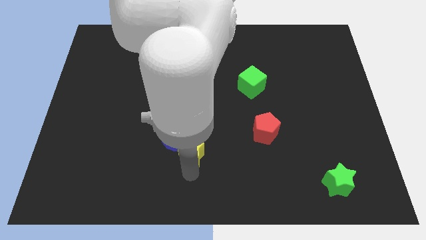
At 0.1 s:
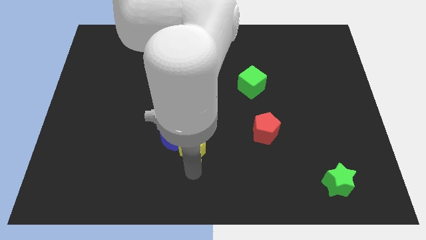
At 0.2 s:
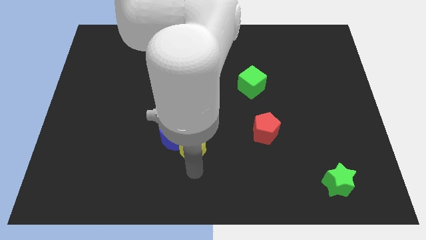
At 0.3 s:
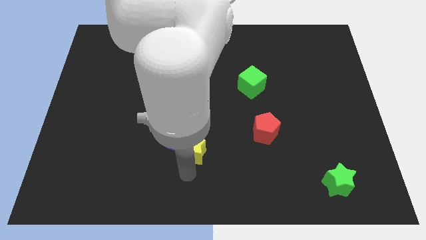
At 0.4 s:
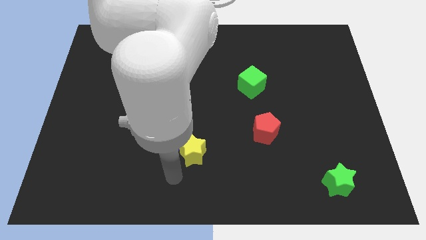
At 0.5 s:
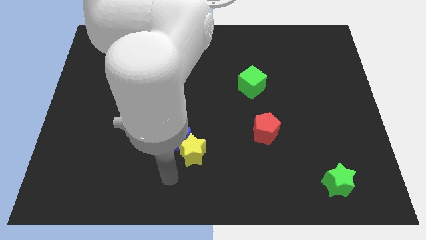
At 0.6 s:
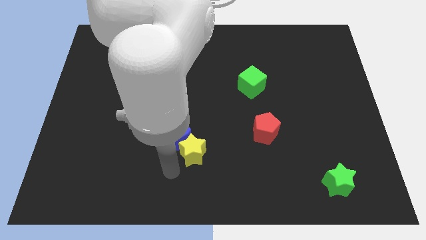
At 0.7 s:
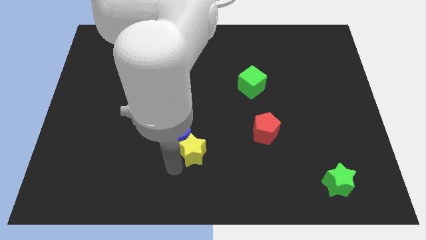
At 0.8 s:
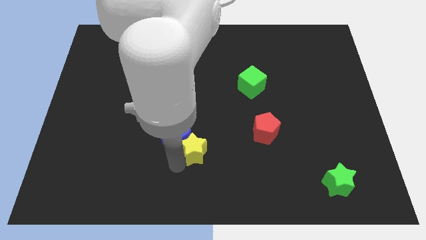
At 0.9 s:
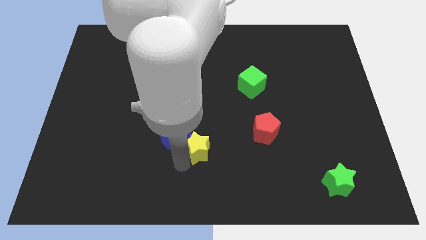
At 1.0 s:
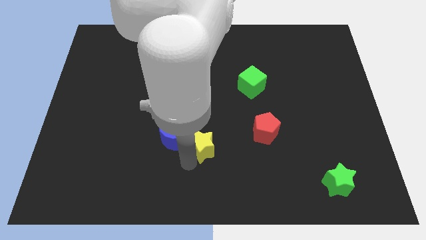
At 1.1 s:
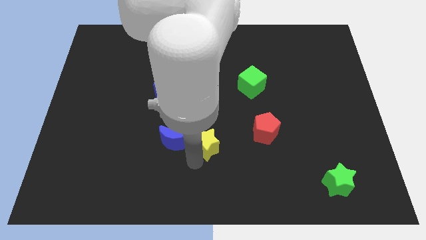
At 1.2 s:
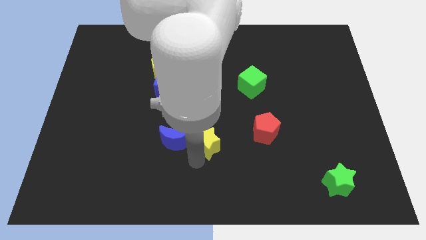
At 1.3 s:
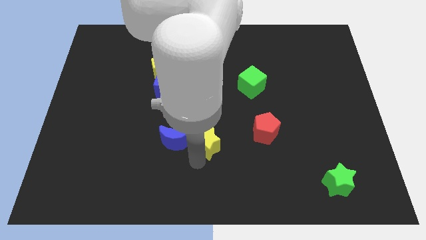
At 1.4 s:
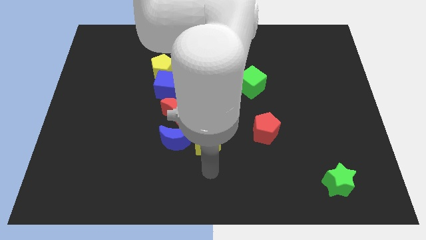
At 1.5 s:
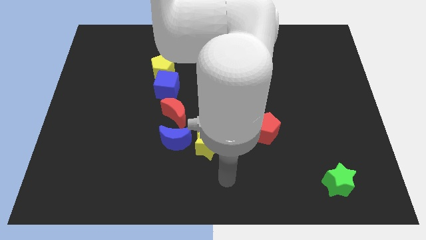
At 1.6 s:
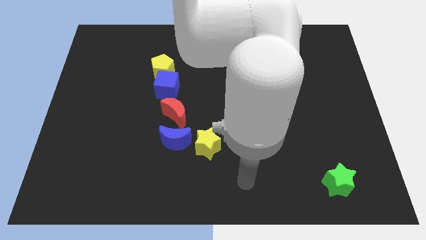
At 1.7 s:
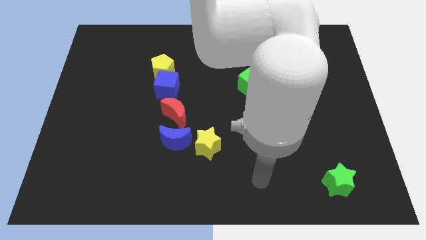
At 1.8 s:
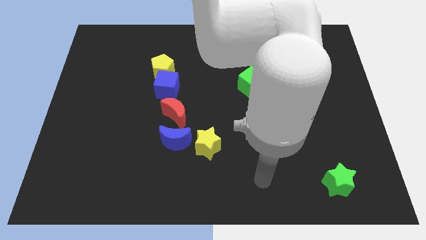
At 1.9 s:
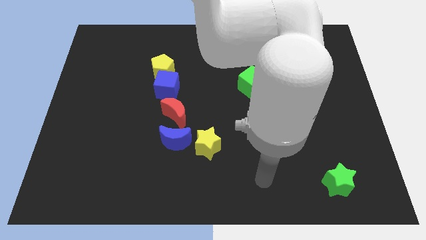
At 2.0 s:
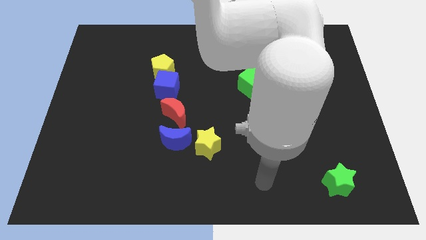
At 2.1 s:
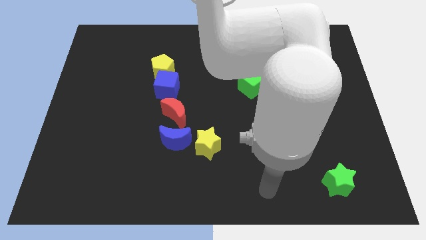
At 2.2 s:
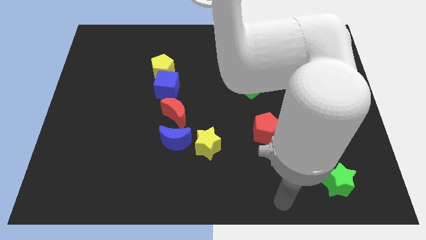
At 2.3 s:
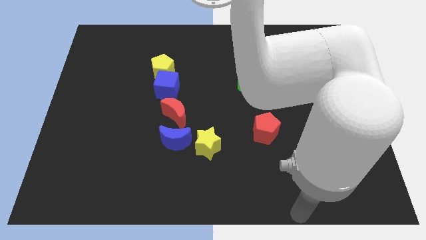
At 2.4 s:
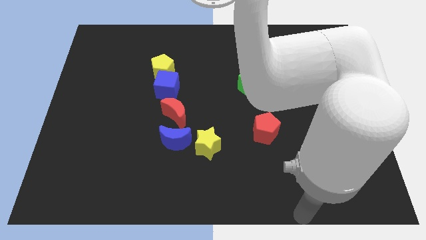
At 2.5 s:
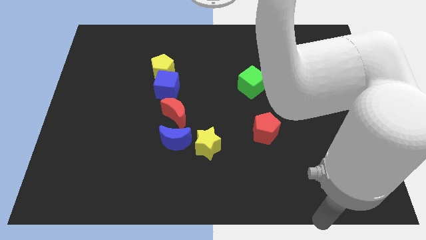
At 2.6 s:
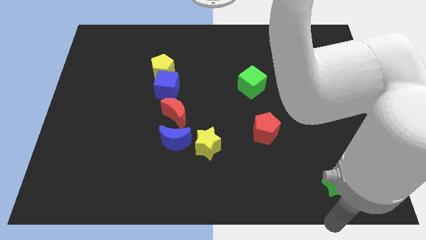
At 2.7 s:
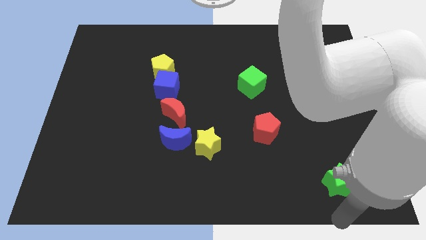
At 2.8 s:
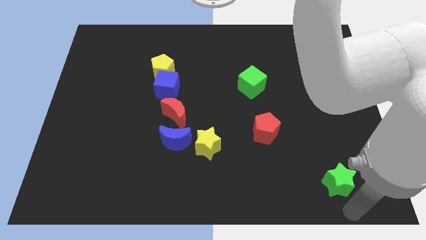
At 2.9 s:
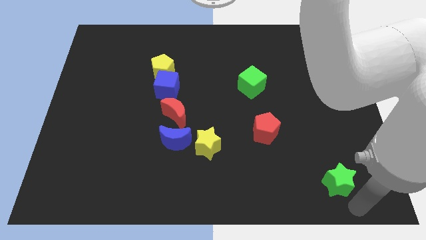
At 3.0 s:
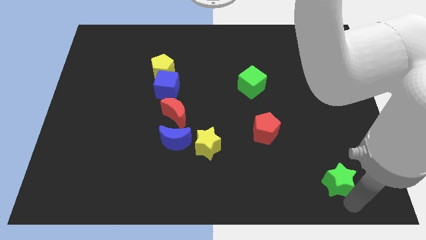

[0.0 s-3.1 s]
point your hand at the bottom side of the green star

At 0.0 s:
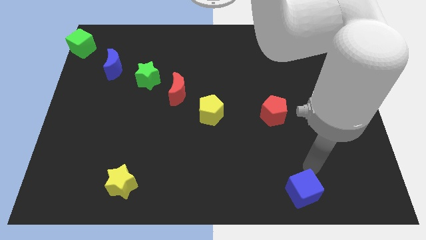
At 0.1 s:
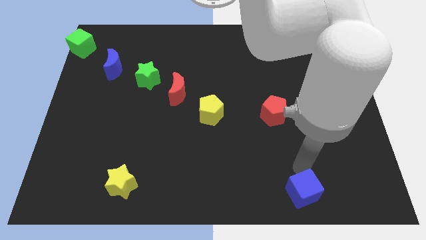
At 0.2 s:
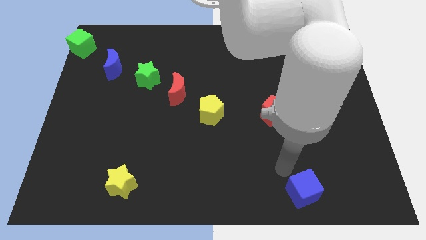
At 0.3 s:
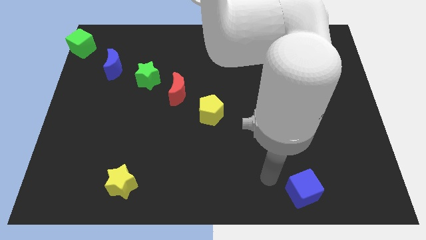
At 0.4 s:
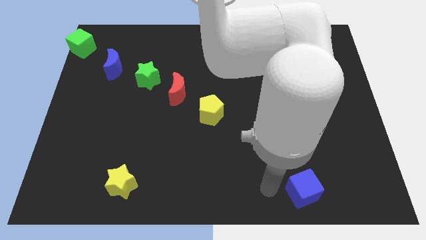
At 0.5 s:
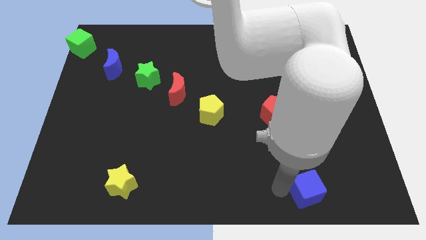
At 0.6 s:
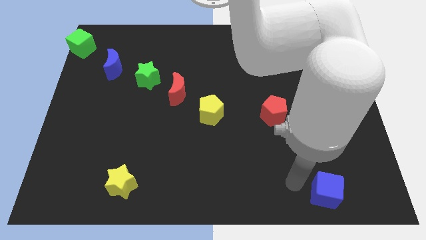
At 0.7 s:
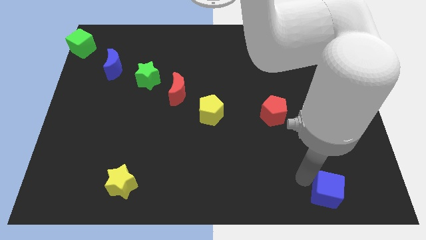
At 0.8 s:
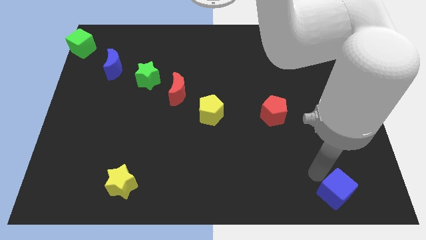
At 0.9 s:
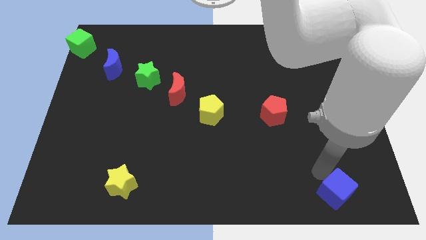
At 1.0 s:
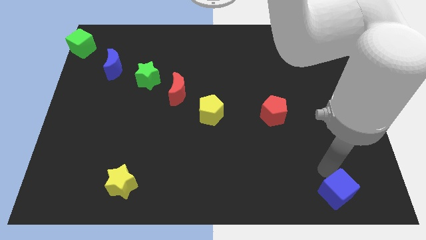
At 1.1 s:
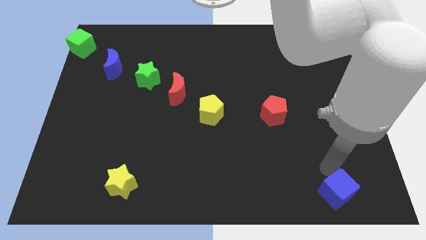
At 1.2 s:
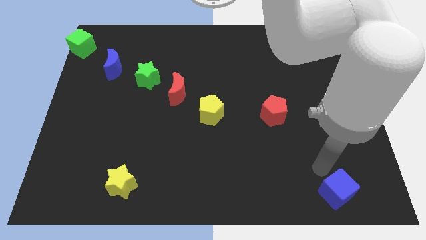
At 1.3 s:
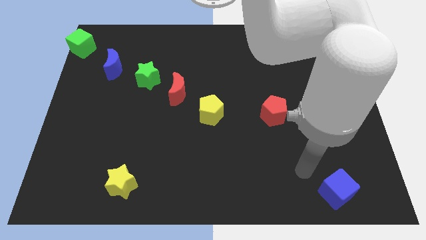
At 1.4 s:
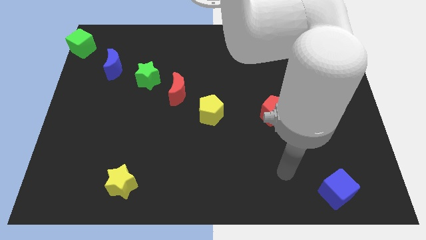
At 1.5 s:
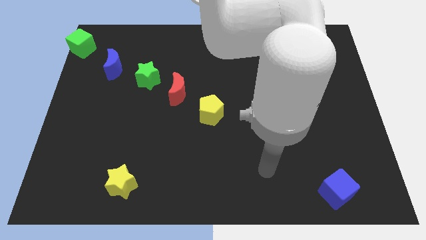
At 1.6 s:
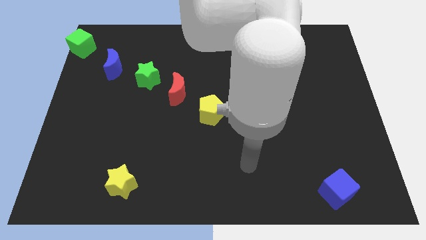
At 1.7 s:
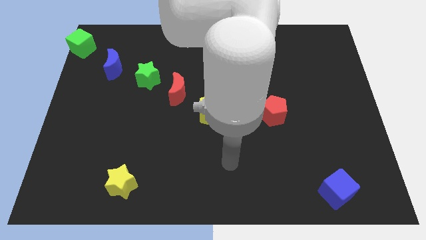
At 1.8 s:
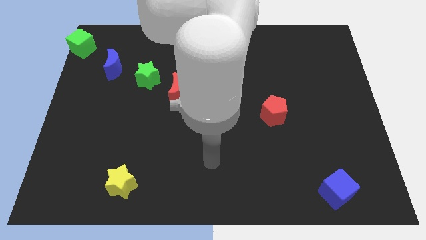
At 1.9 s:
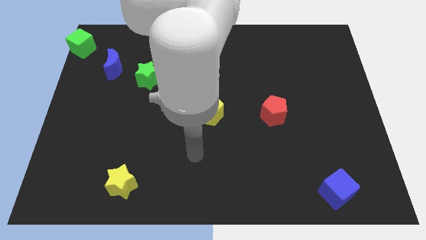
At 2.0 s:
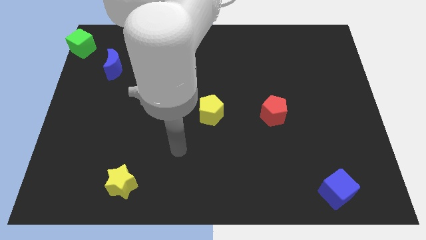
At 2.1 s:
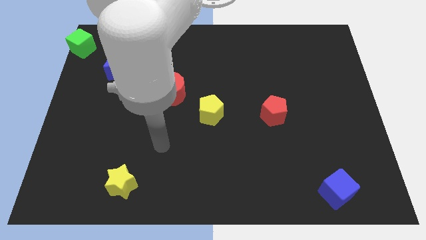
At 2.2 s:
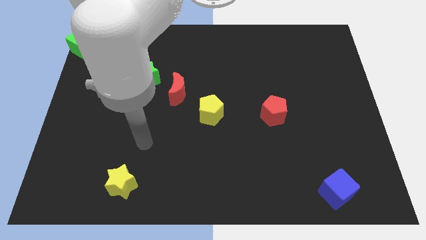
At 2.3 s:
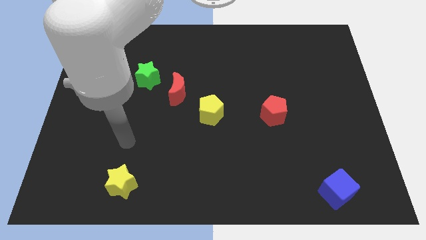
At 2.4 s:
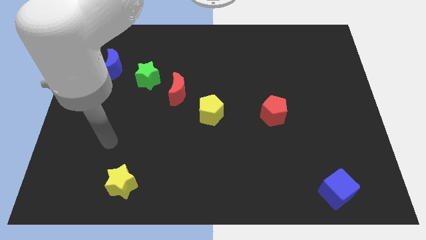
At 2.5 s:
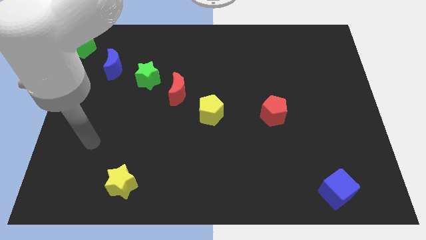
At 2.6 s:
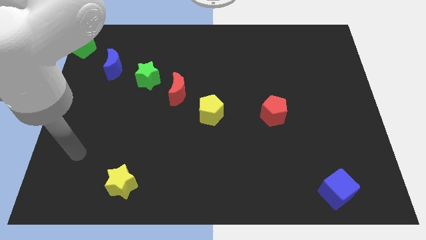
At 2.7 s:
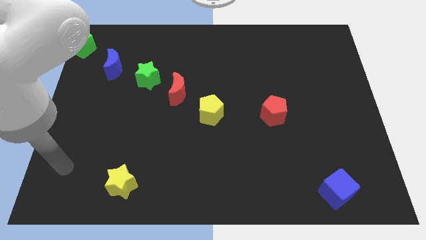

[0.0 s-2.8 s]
slightly push the blue block to the right

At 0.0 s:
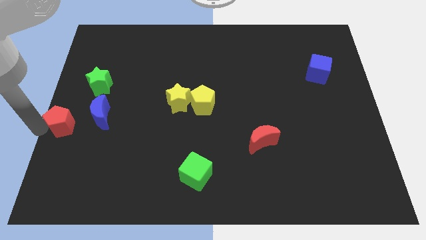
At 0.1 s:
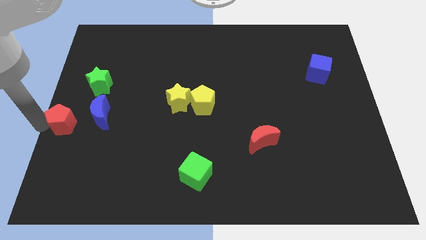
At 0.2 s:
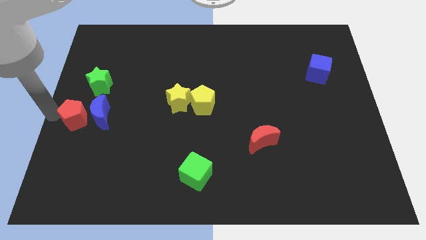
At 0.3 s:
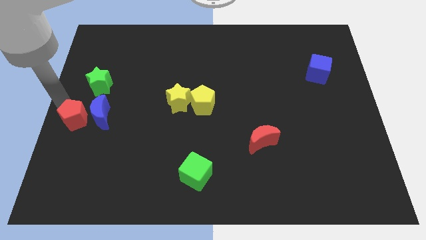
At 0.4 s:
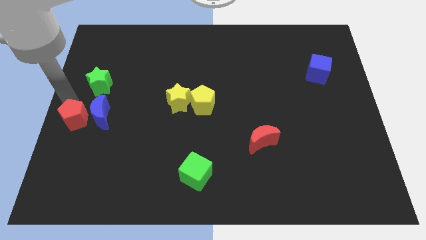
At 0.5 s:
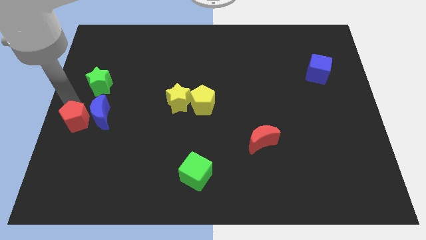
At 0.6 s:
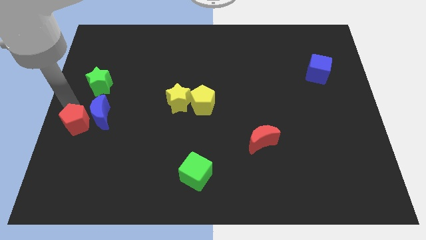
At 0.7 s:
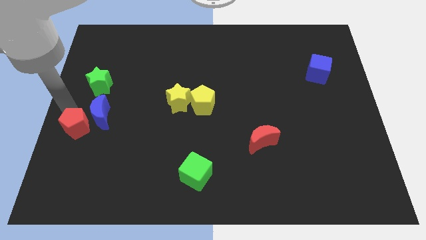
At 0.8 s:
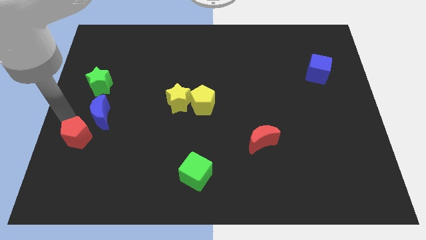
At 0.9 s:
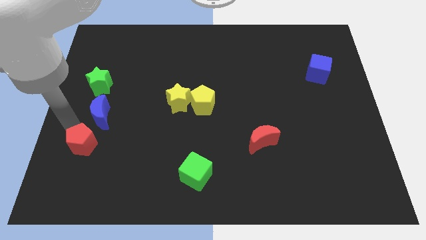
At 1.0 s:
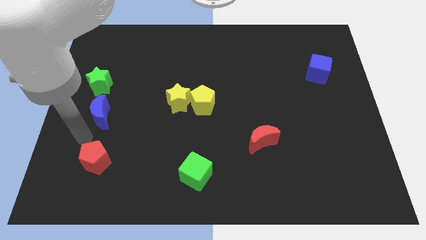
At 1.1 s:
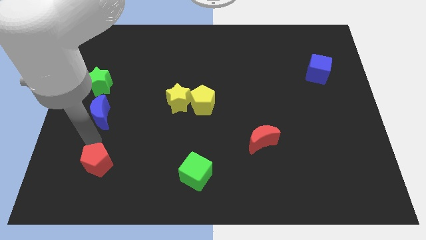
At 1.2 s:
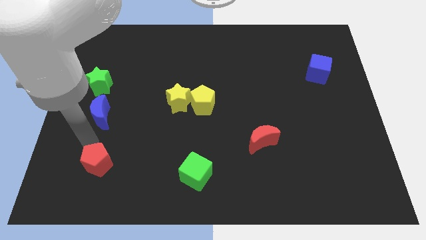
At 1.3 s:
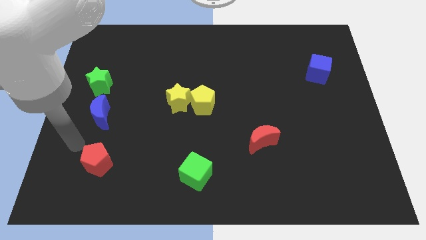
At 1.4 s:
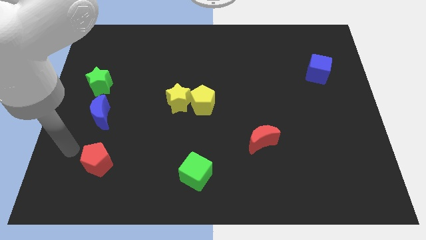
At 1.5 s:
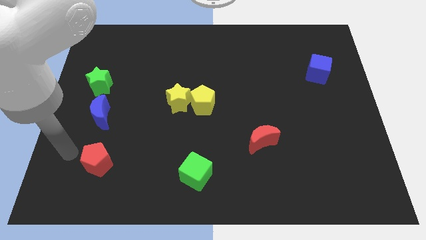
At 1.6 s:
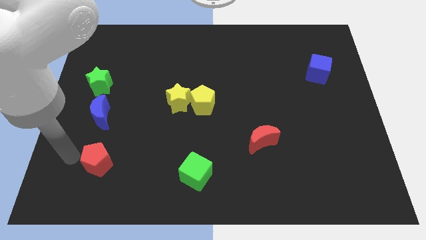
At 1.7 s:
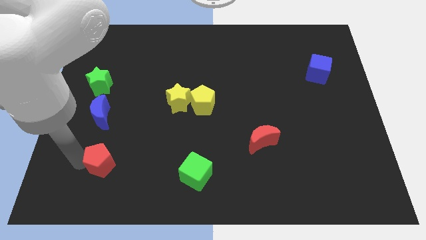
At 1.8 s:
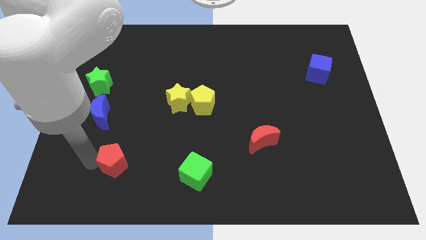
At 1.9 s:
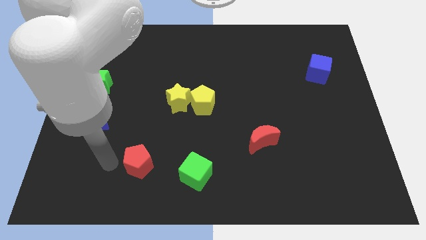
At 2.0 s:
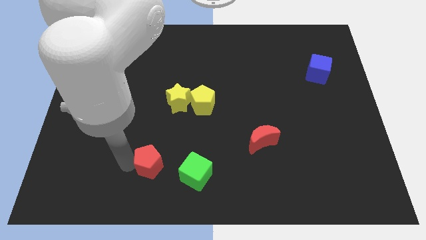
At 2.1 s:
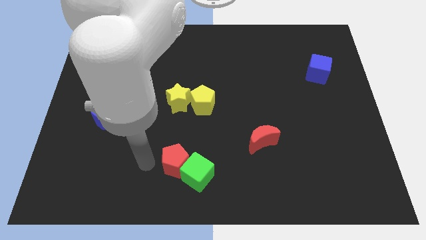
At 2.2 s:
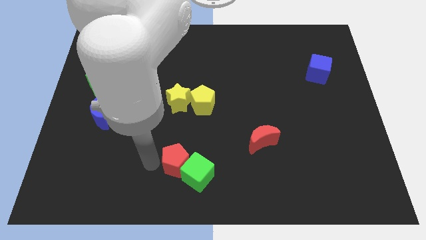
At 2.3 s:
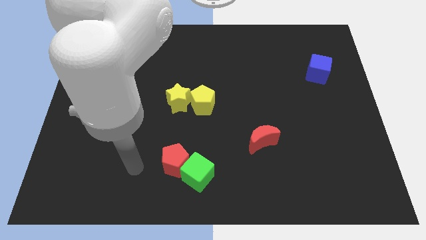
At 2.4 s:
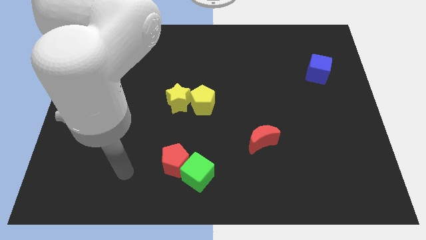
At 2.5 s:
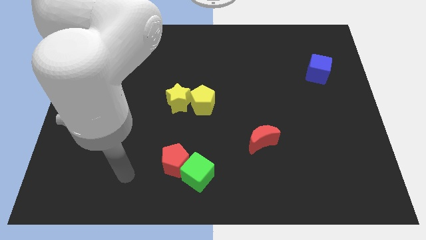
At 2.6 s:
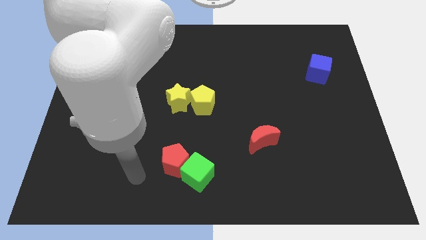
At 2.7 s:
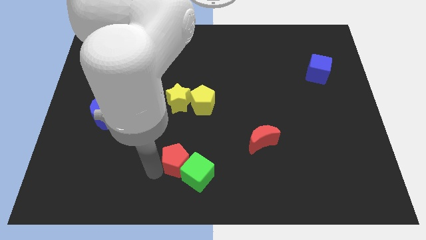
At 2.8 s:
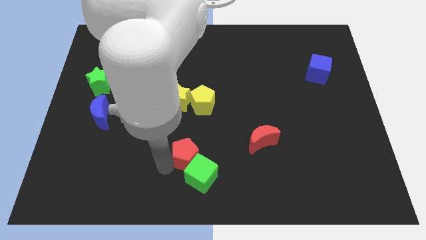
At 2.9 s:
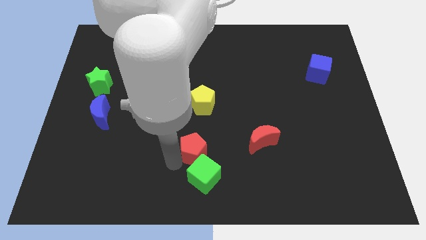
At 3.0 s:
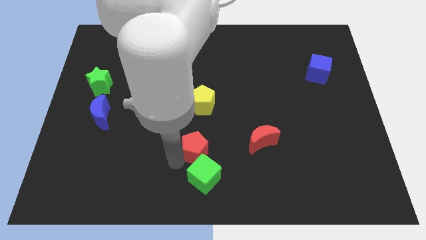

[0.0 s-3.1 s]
move the red pentagon close to green cube
